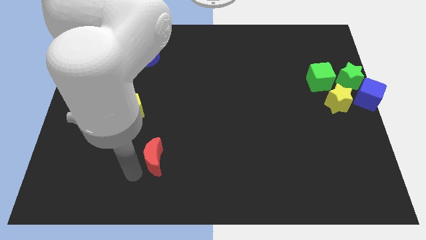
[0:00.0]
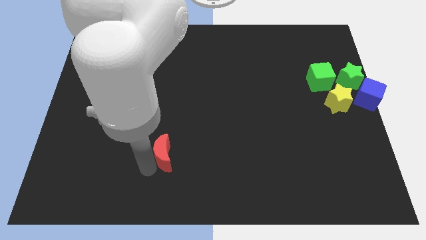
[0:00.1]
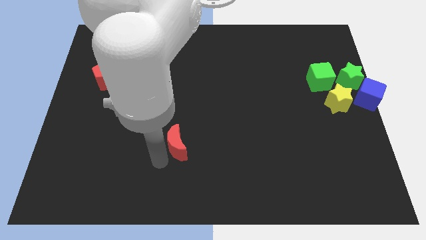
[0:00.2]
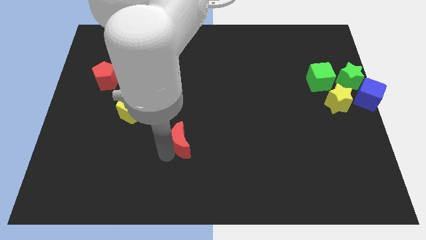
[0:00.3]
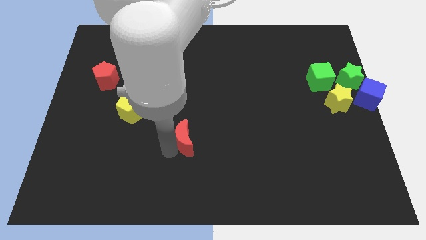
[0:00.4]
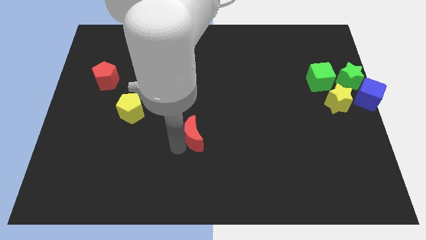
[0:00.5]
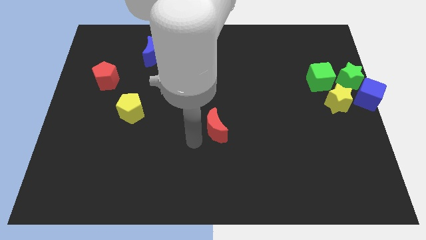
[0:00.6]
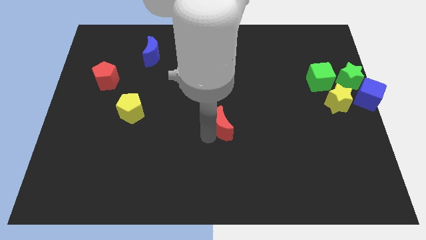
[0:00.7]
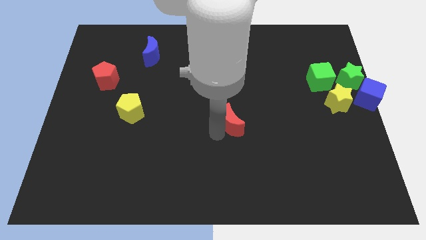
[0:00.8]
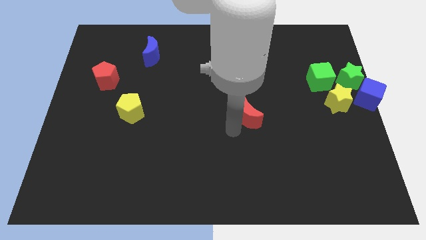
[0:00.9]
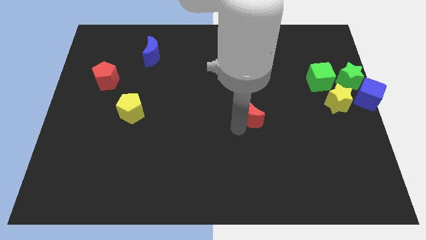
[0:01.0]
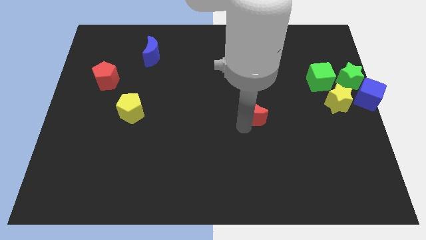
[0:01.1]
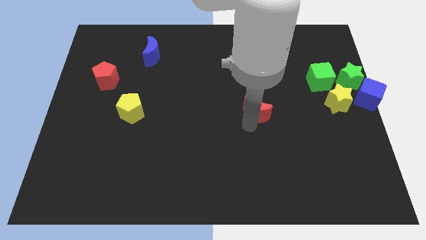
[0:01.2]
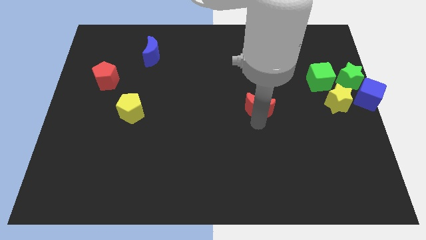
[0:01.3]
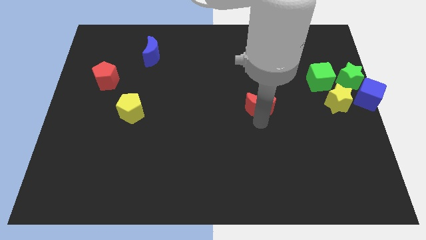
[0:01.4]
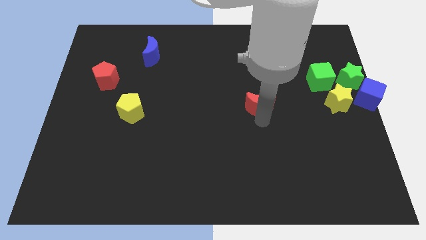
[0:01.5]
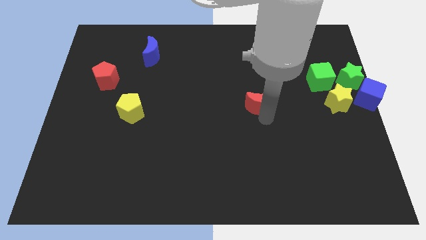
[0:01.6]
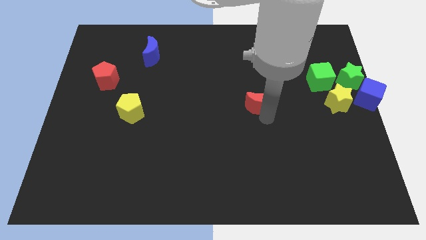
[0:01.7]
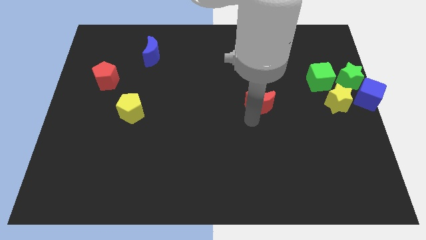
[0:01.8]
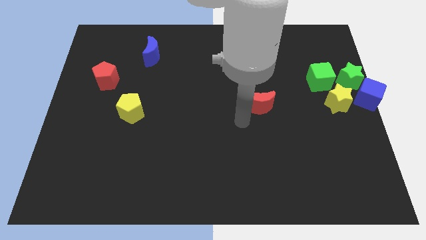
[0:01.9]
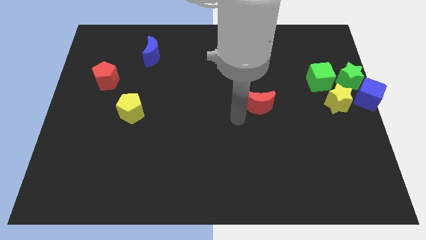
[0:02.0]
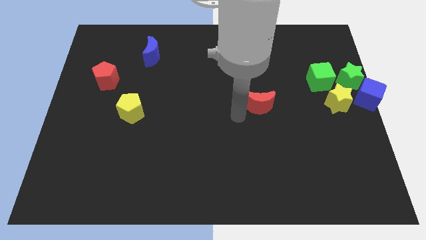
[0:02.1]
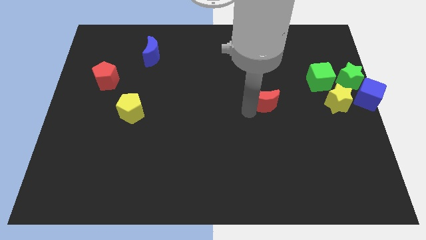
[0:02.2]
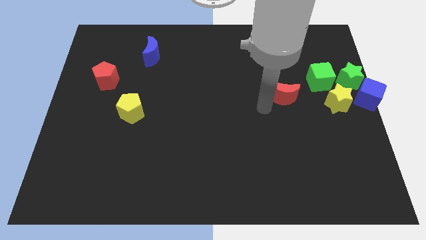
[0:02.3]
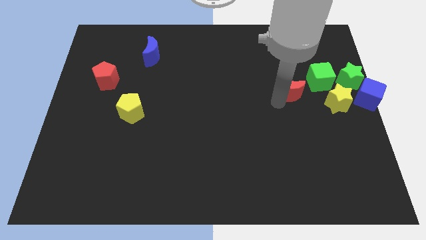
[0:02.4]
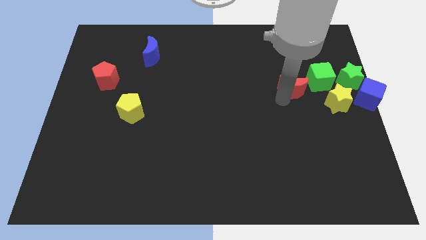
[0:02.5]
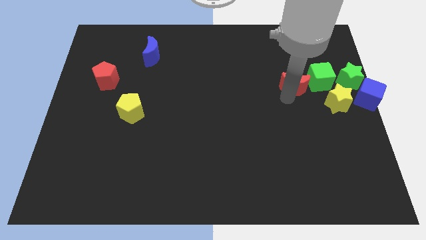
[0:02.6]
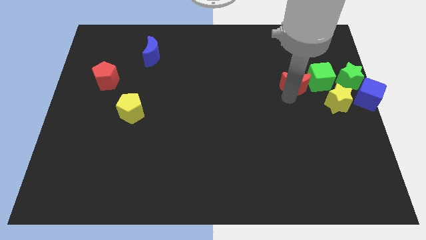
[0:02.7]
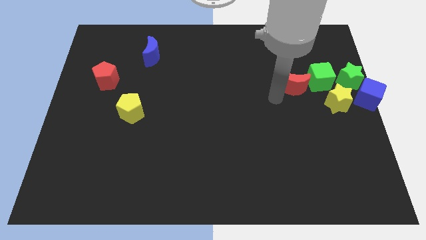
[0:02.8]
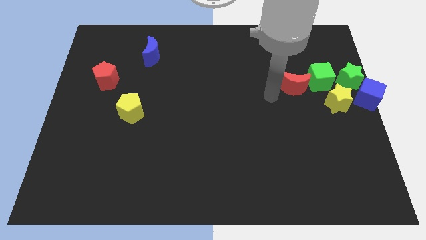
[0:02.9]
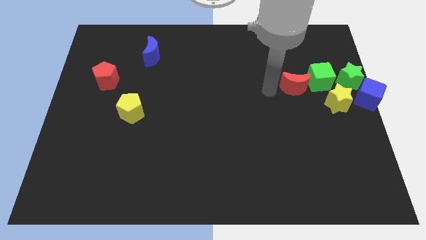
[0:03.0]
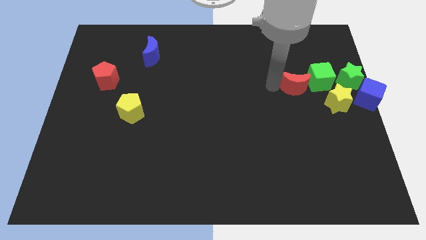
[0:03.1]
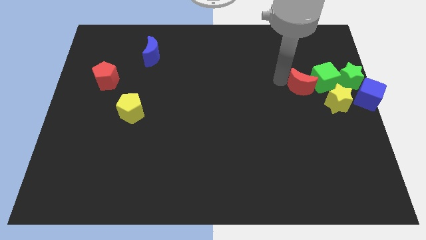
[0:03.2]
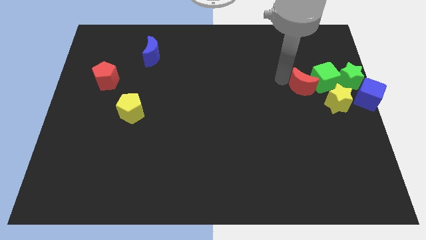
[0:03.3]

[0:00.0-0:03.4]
push the red crescent into the green cube

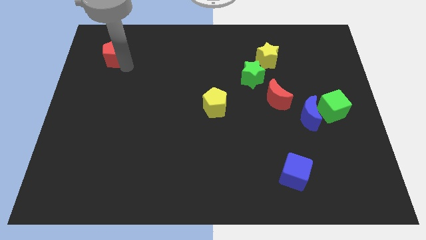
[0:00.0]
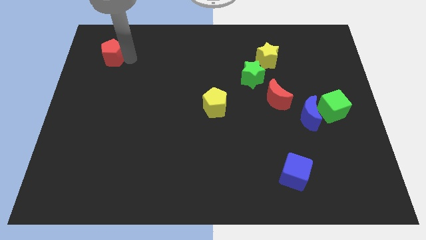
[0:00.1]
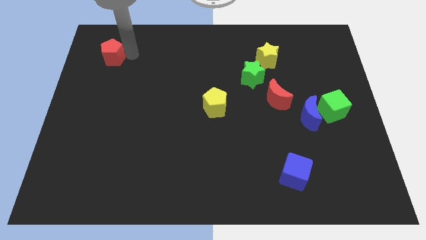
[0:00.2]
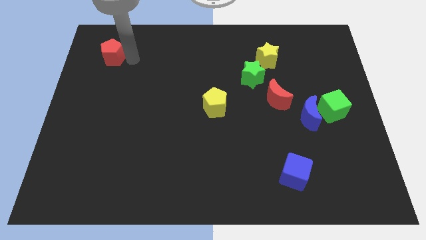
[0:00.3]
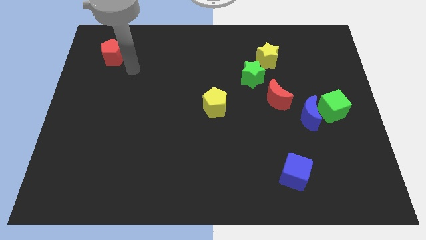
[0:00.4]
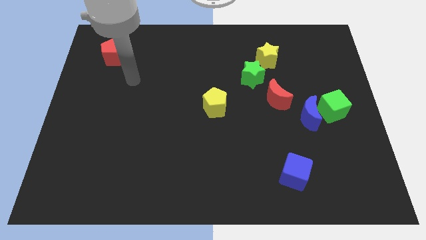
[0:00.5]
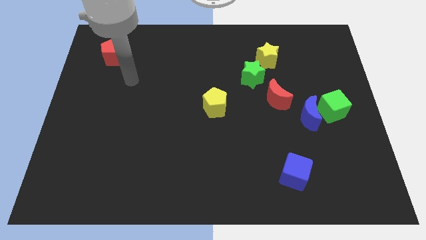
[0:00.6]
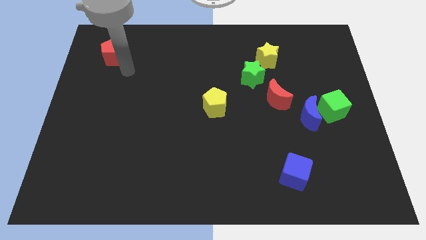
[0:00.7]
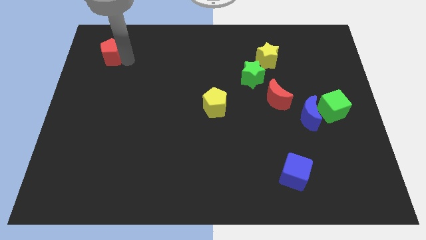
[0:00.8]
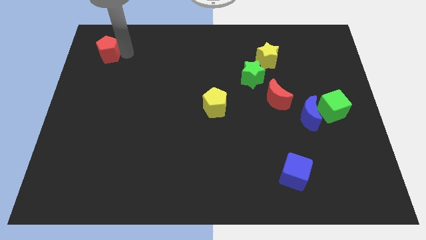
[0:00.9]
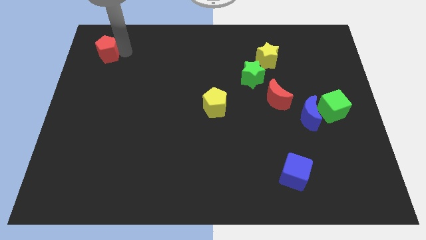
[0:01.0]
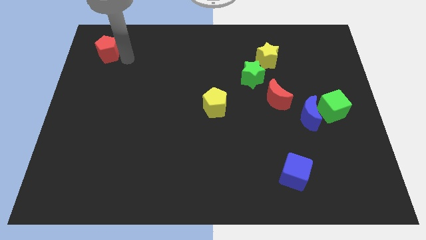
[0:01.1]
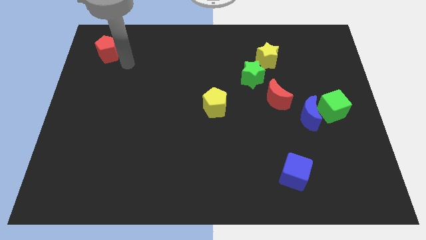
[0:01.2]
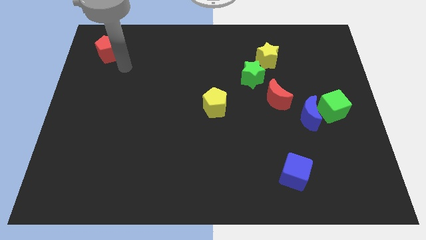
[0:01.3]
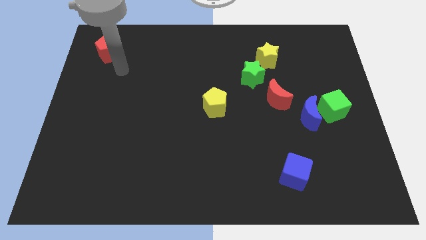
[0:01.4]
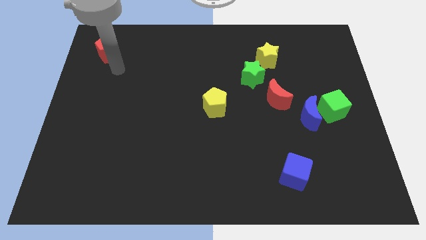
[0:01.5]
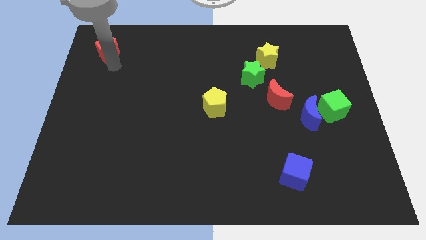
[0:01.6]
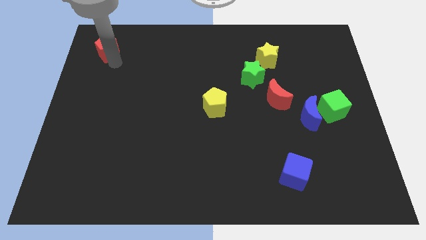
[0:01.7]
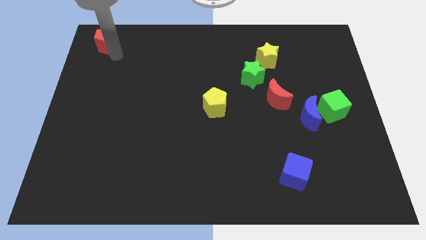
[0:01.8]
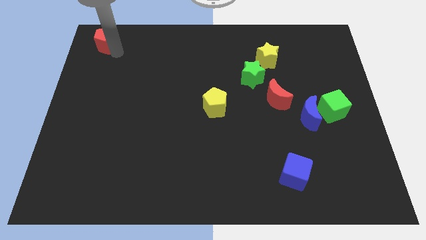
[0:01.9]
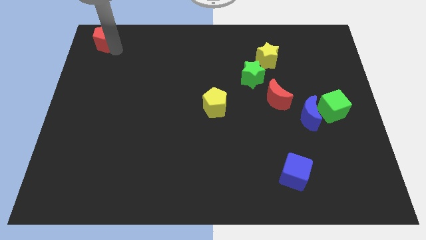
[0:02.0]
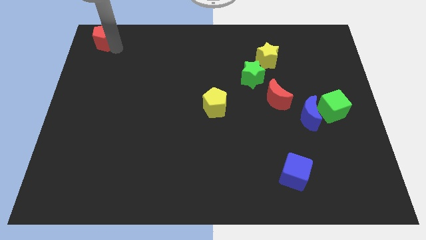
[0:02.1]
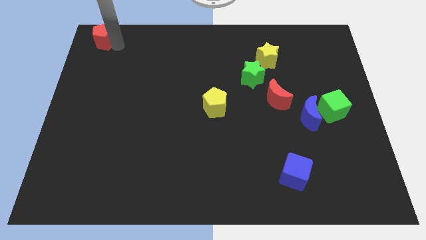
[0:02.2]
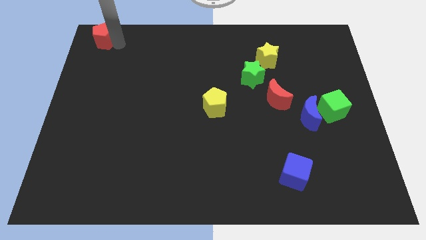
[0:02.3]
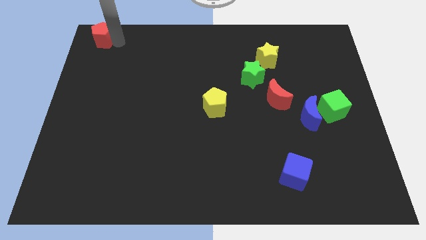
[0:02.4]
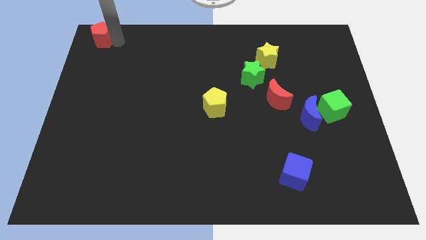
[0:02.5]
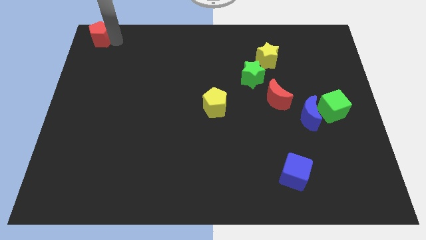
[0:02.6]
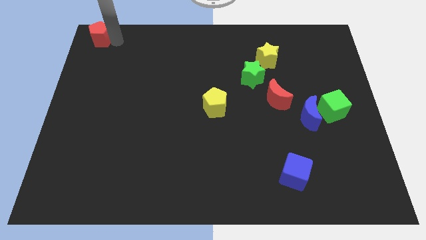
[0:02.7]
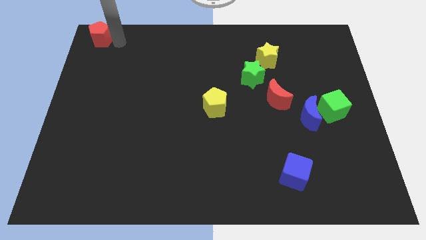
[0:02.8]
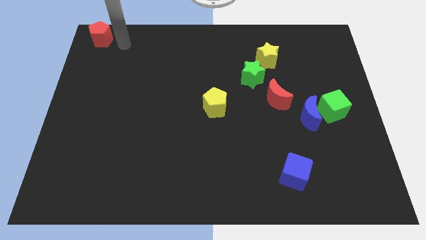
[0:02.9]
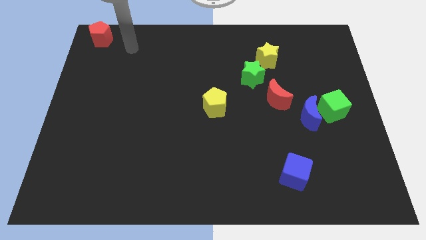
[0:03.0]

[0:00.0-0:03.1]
push the red pentagon to top left side

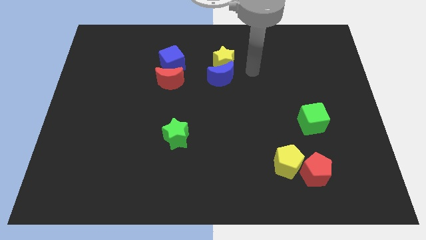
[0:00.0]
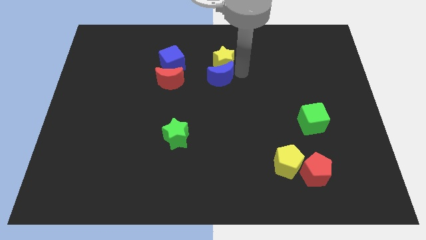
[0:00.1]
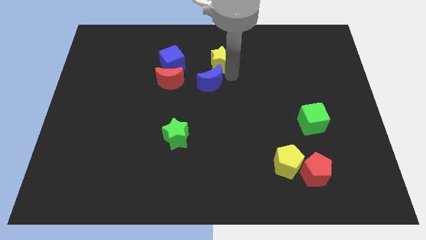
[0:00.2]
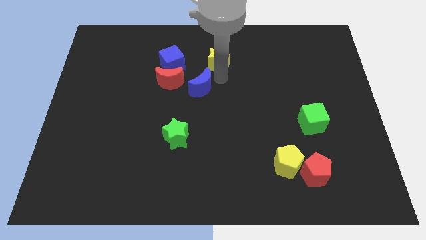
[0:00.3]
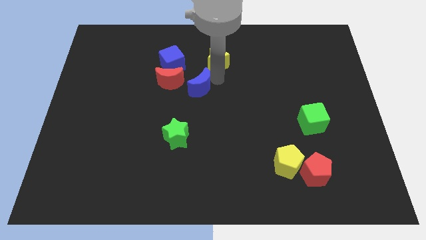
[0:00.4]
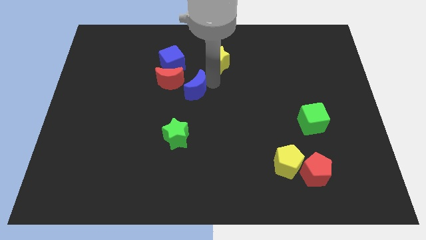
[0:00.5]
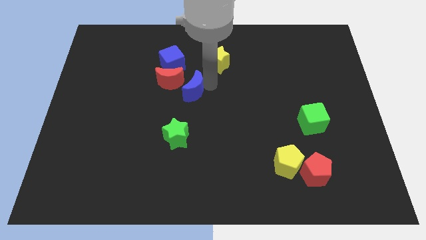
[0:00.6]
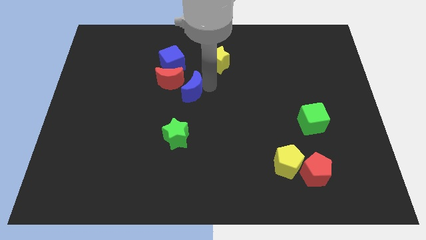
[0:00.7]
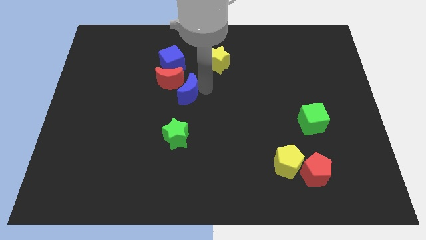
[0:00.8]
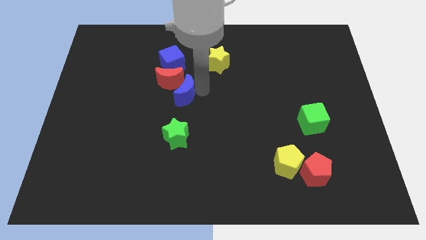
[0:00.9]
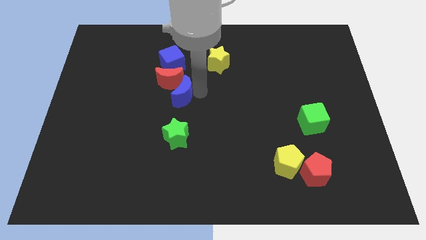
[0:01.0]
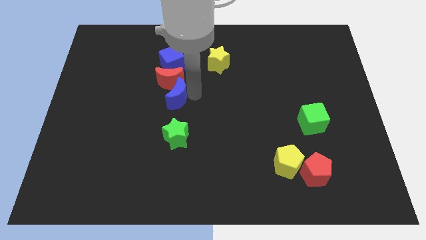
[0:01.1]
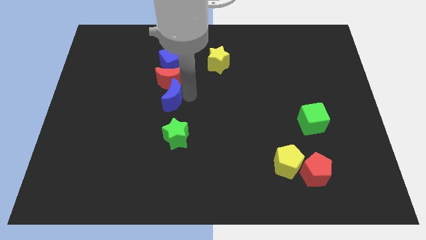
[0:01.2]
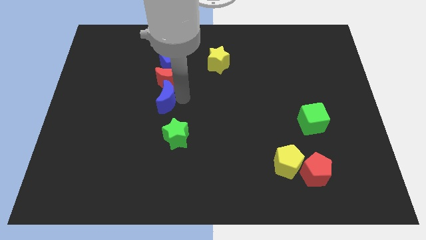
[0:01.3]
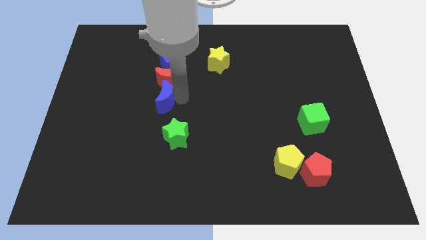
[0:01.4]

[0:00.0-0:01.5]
put the blue crescent above the green star

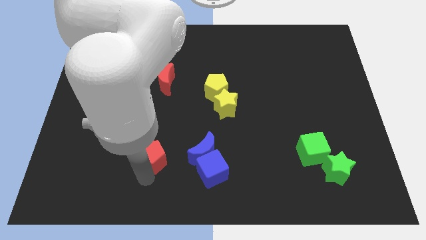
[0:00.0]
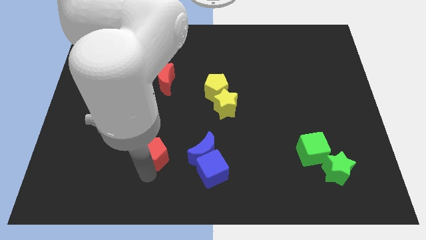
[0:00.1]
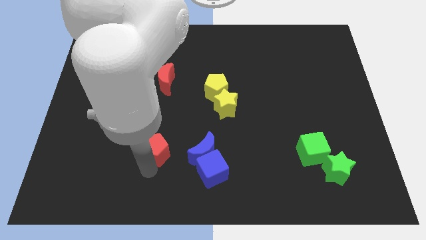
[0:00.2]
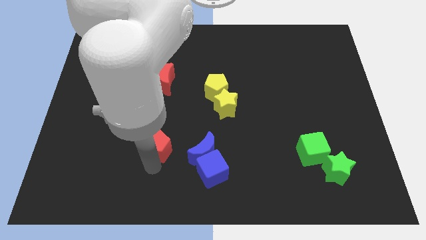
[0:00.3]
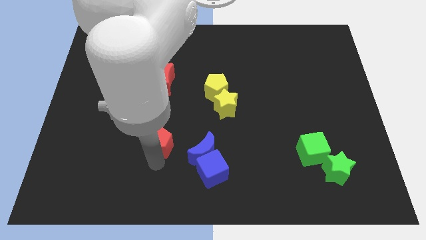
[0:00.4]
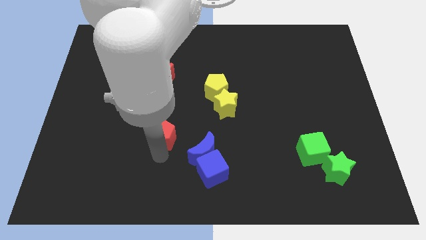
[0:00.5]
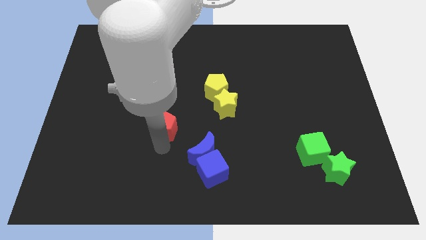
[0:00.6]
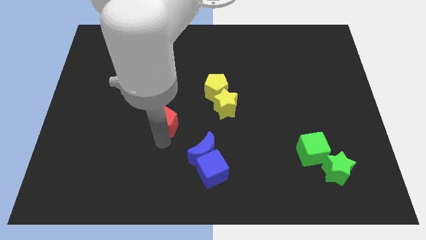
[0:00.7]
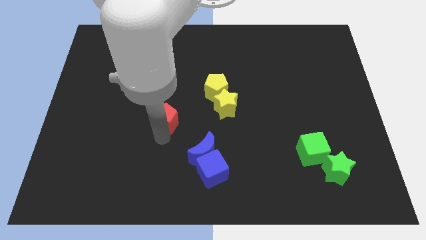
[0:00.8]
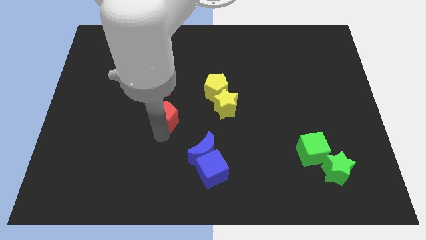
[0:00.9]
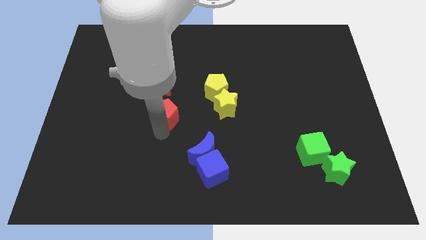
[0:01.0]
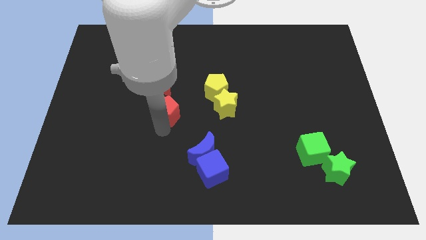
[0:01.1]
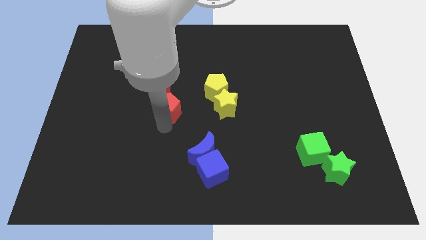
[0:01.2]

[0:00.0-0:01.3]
push the red pentagon to the left of the yellow star
